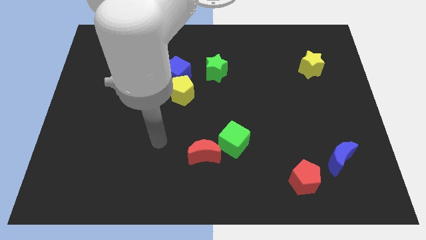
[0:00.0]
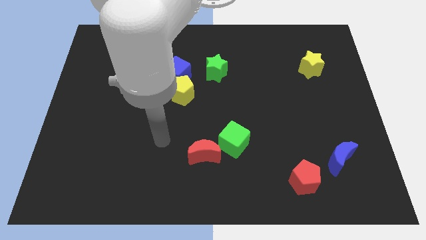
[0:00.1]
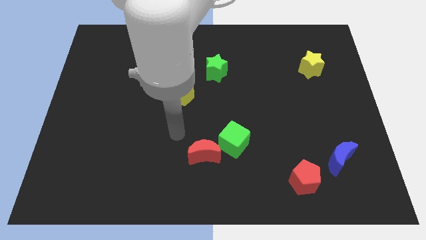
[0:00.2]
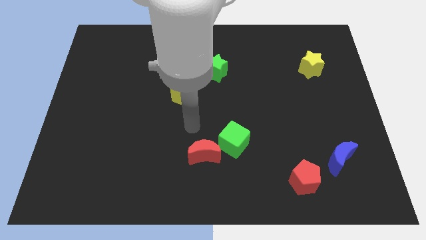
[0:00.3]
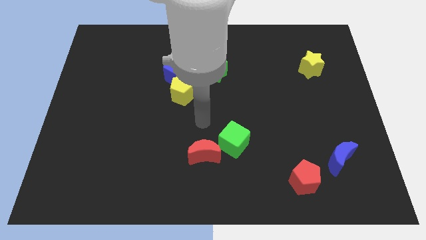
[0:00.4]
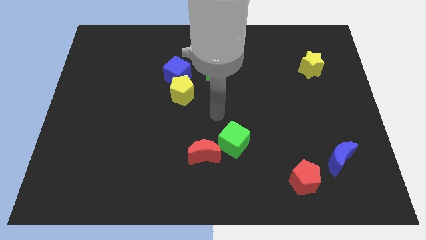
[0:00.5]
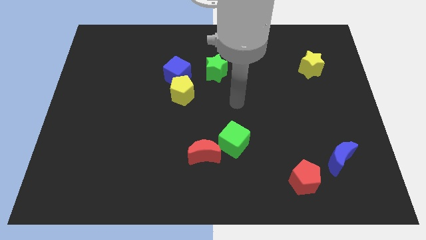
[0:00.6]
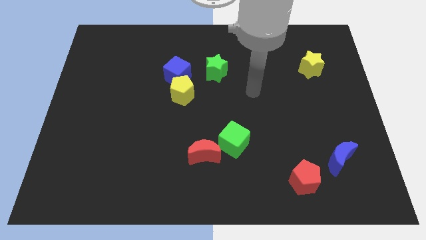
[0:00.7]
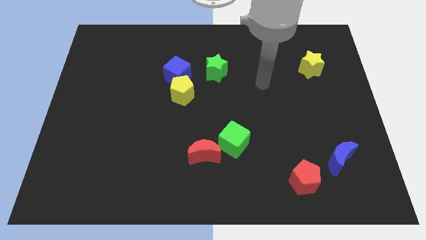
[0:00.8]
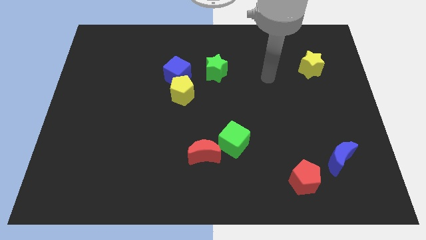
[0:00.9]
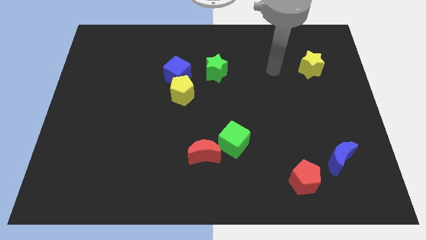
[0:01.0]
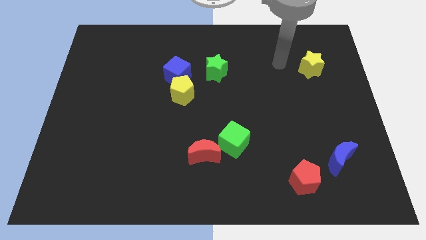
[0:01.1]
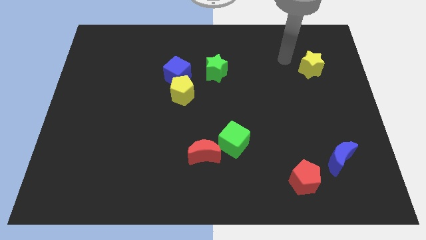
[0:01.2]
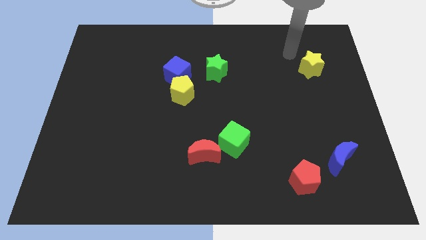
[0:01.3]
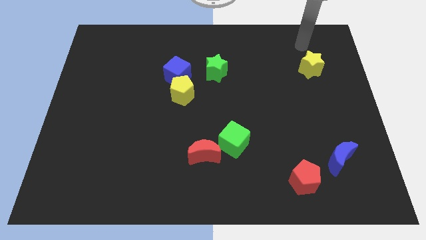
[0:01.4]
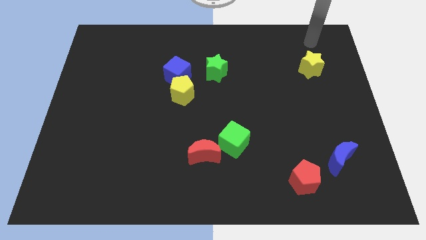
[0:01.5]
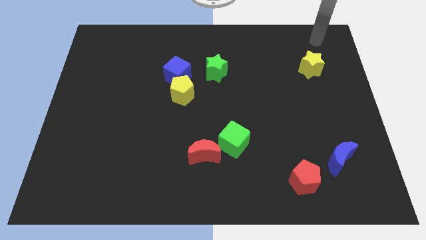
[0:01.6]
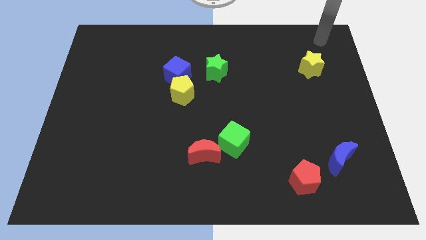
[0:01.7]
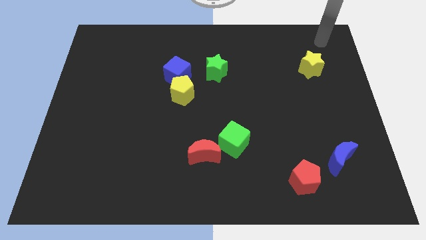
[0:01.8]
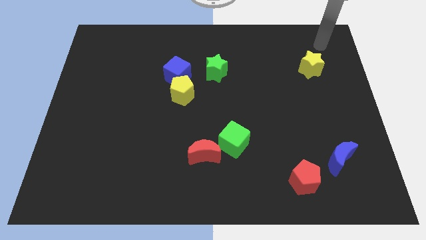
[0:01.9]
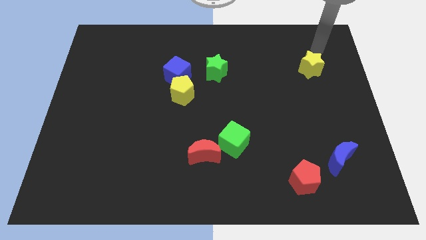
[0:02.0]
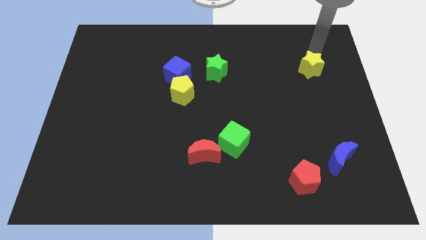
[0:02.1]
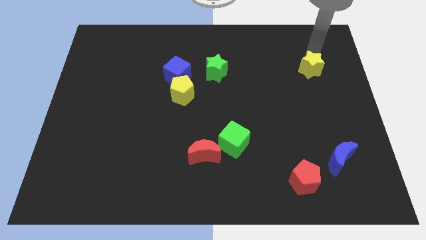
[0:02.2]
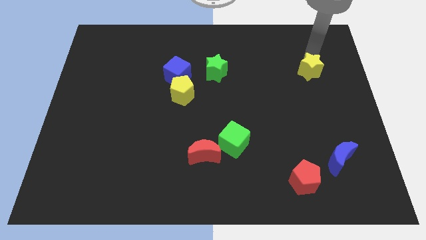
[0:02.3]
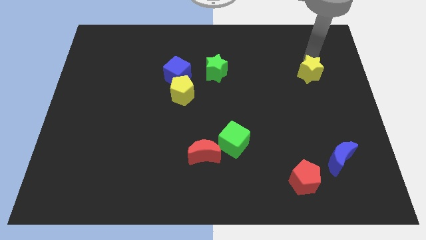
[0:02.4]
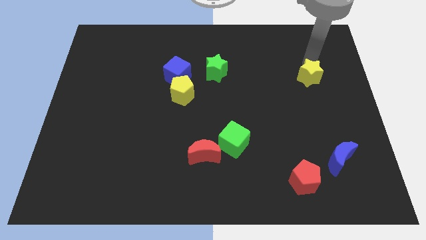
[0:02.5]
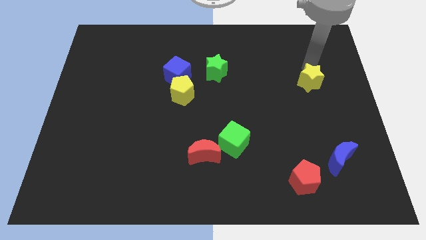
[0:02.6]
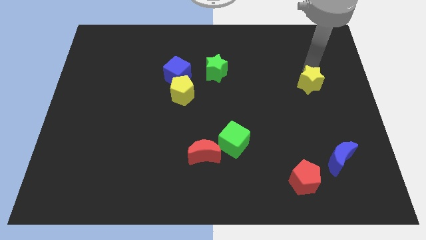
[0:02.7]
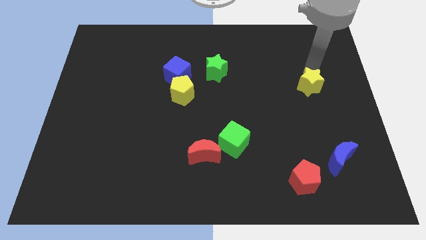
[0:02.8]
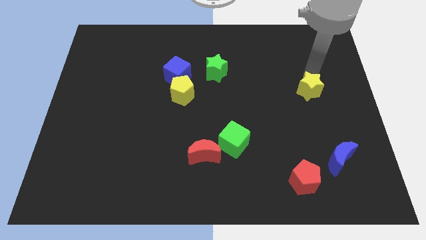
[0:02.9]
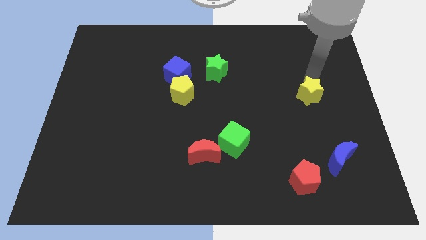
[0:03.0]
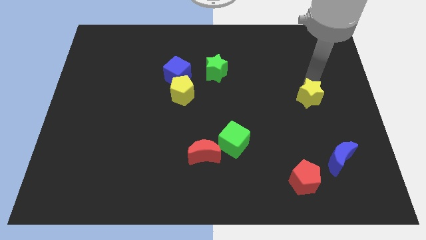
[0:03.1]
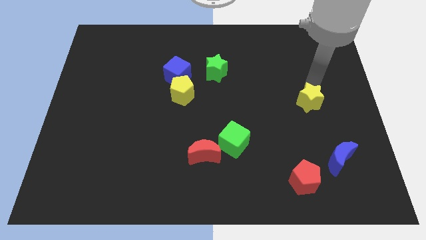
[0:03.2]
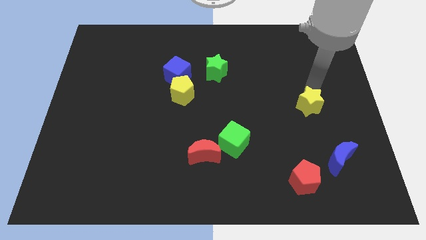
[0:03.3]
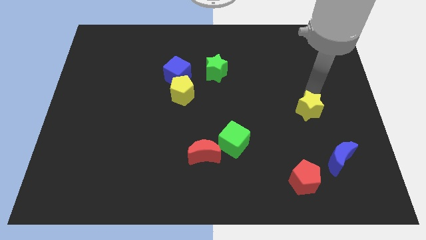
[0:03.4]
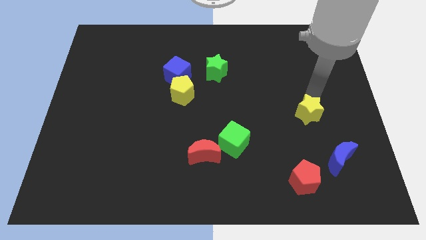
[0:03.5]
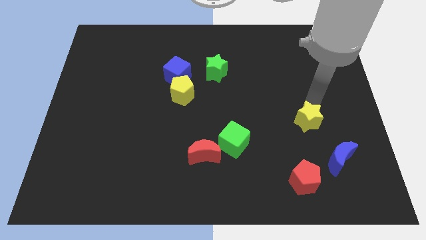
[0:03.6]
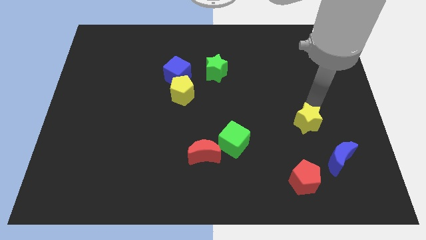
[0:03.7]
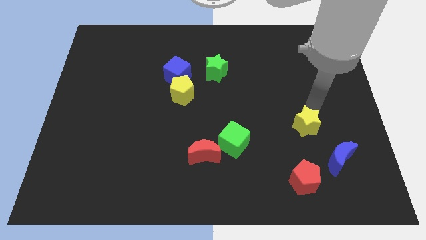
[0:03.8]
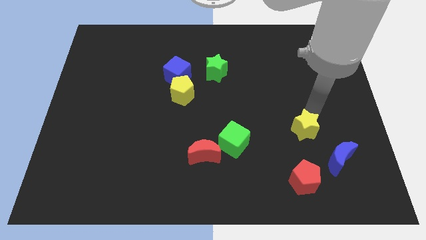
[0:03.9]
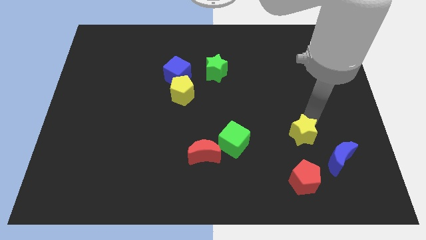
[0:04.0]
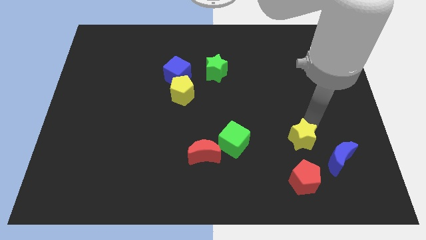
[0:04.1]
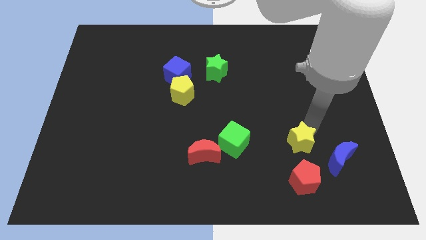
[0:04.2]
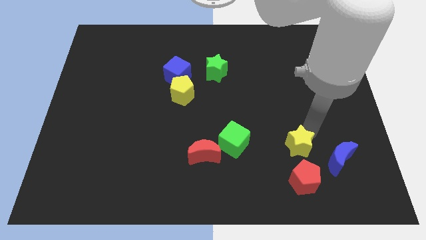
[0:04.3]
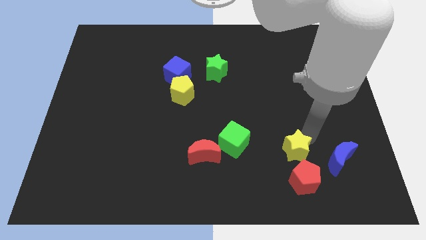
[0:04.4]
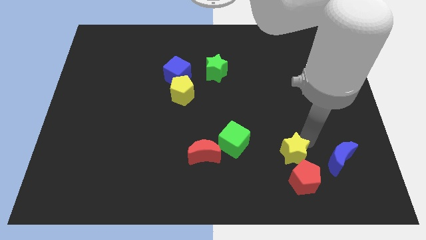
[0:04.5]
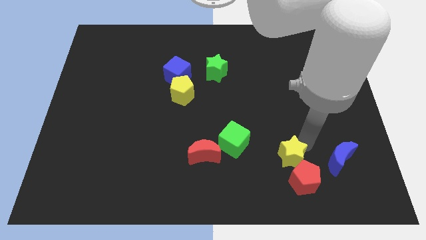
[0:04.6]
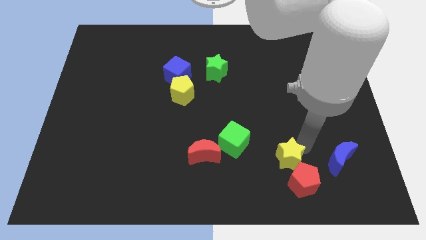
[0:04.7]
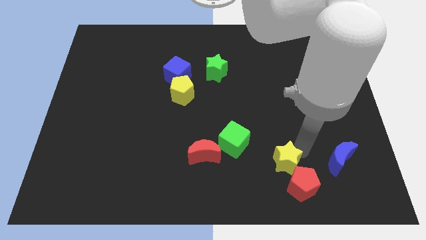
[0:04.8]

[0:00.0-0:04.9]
put the yellow star towards the red pentagon

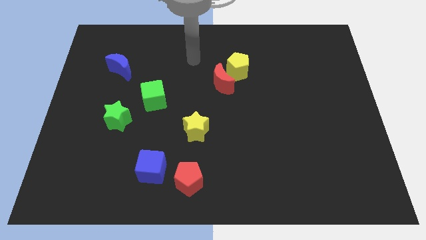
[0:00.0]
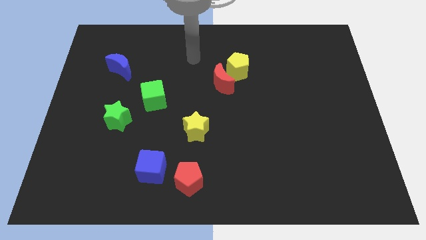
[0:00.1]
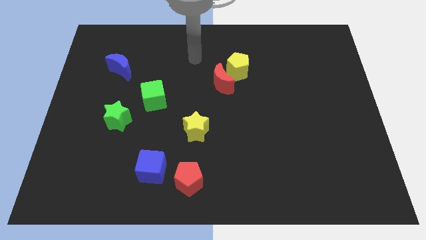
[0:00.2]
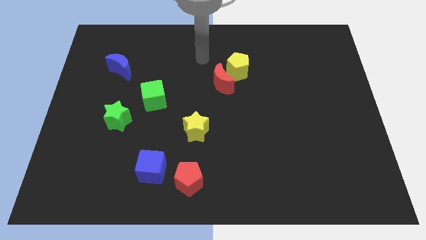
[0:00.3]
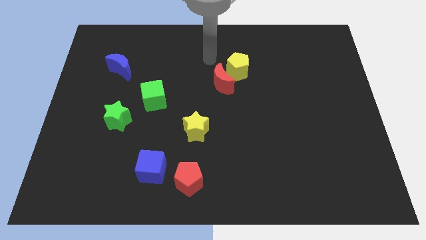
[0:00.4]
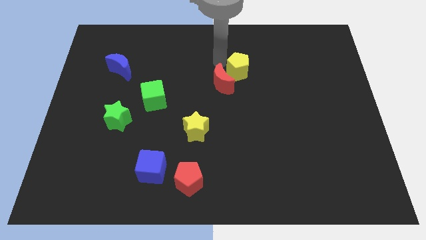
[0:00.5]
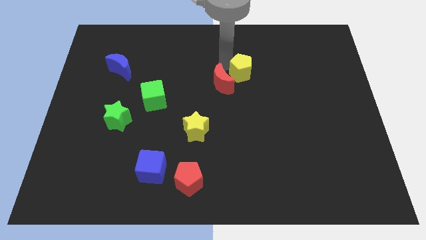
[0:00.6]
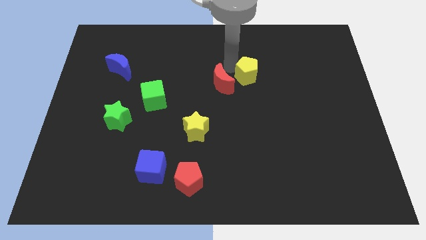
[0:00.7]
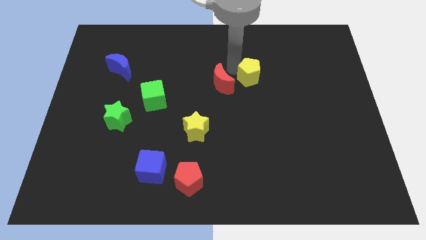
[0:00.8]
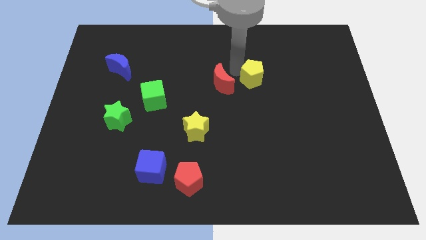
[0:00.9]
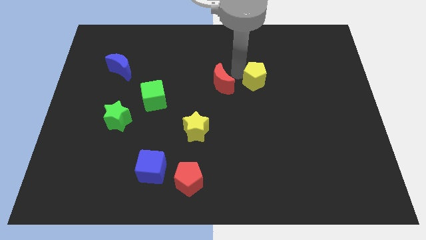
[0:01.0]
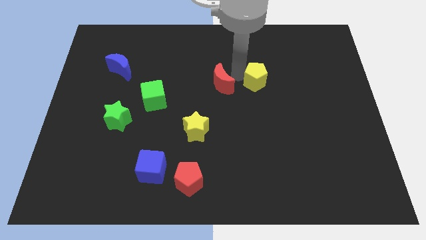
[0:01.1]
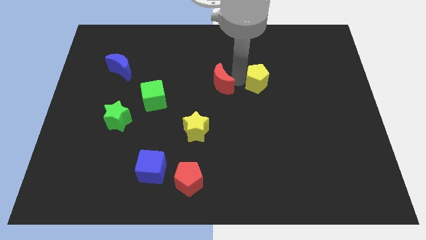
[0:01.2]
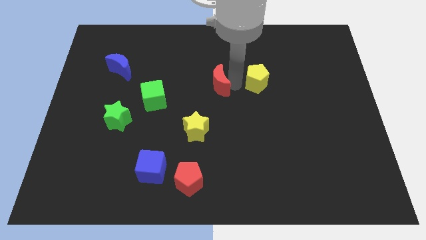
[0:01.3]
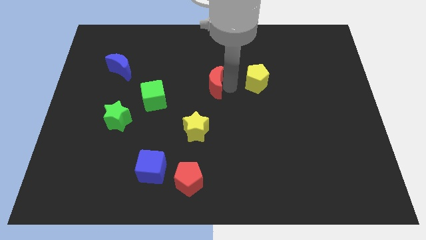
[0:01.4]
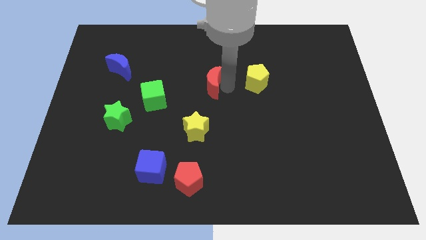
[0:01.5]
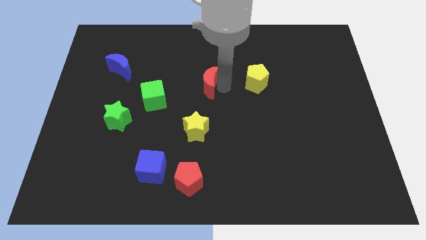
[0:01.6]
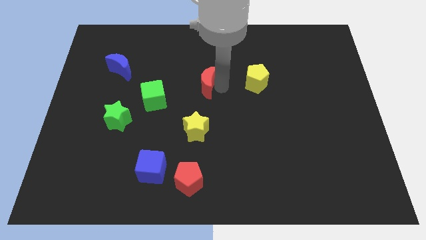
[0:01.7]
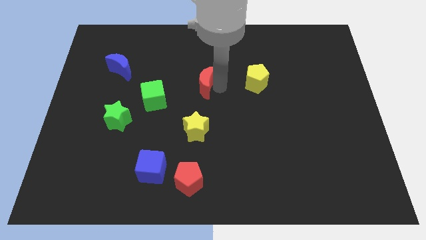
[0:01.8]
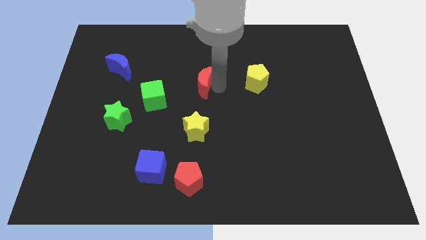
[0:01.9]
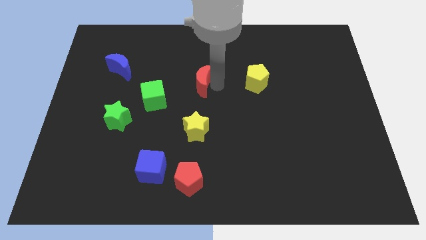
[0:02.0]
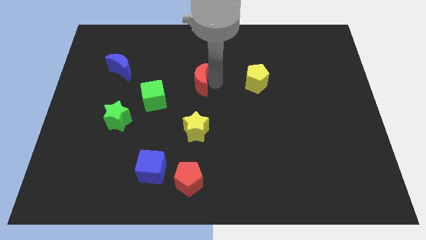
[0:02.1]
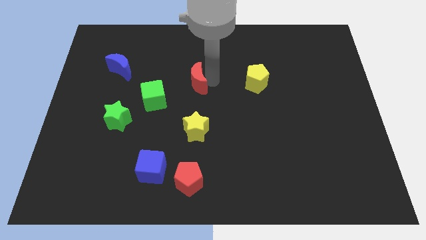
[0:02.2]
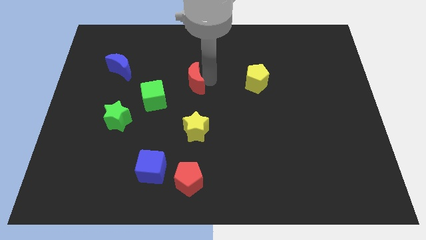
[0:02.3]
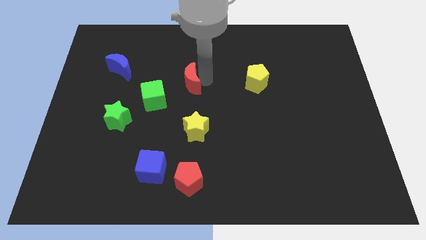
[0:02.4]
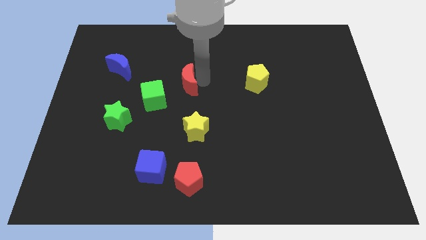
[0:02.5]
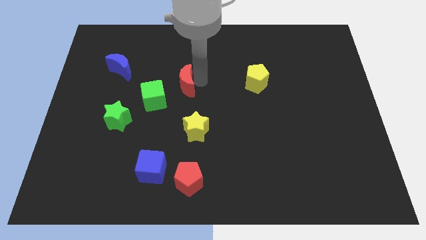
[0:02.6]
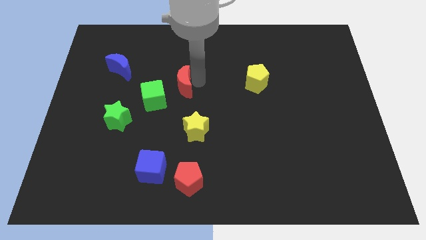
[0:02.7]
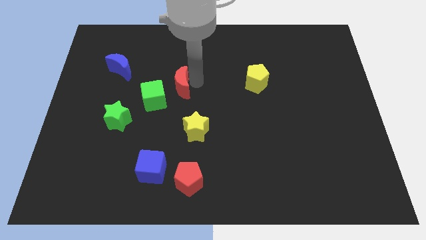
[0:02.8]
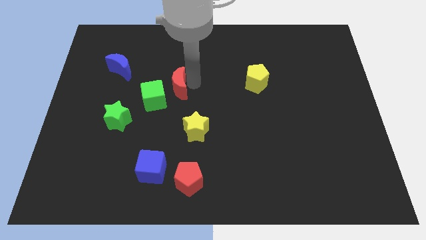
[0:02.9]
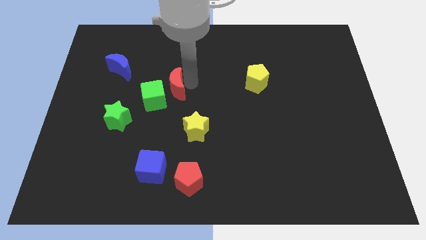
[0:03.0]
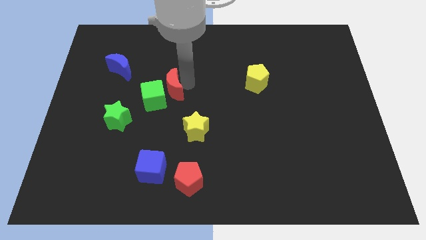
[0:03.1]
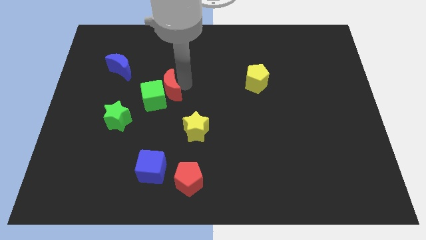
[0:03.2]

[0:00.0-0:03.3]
slide the red moon towards the green cube
